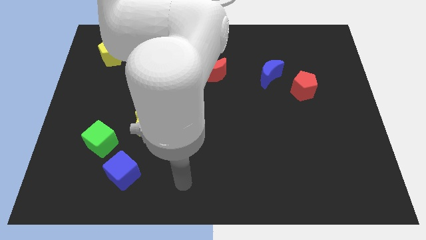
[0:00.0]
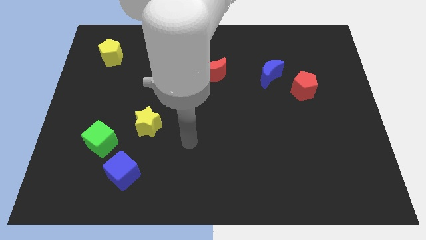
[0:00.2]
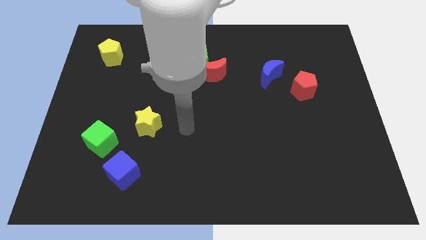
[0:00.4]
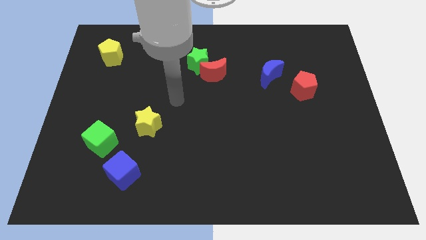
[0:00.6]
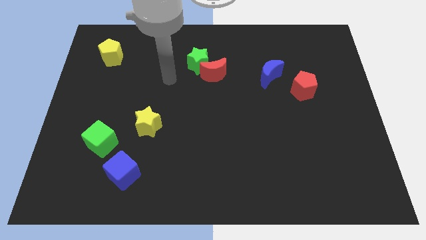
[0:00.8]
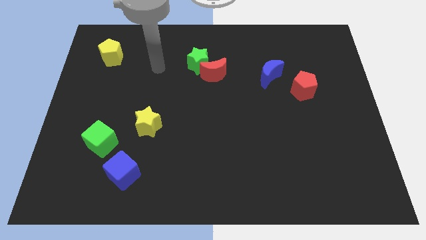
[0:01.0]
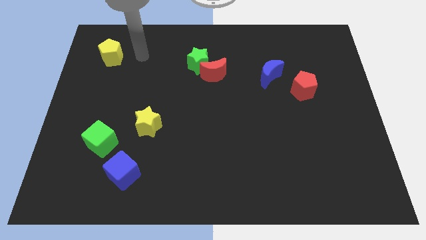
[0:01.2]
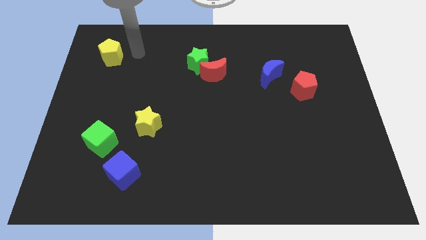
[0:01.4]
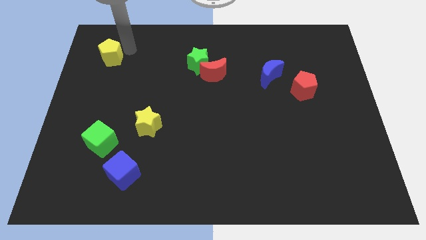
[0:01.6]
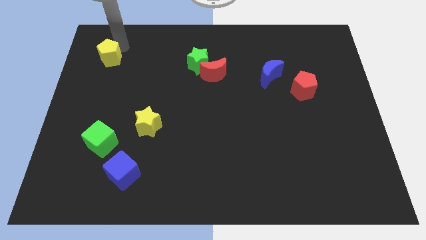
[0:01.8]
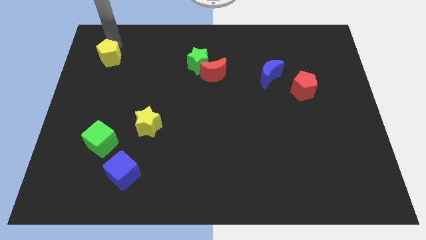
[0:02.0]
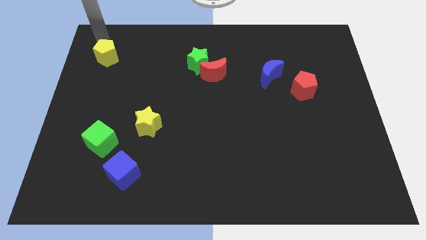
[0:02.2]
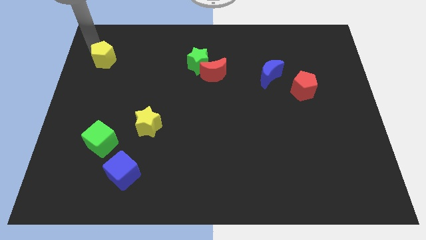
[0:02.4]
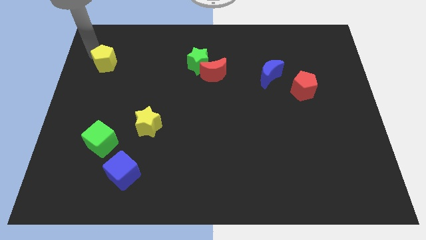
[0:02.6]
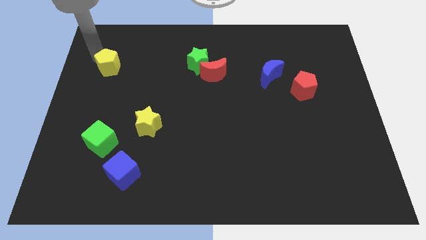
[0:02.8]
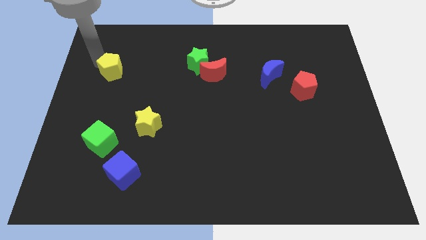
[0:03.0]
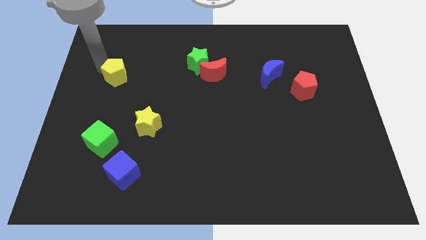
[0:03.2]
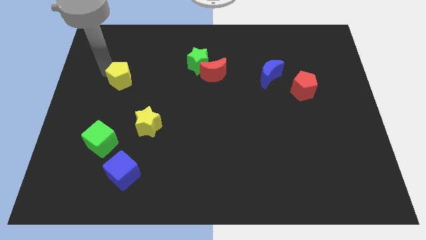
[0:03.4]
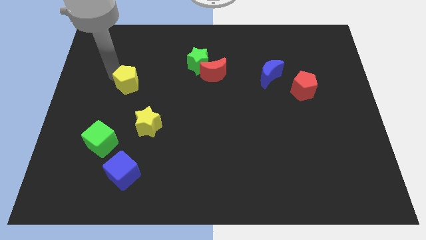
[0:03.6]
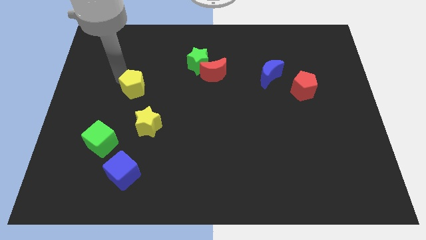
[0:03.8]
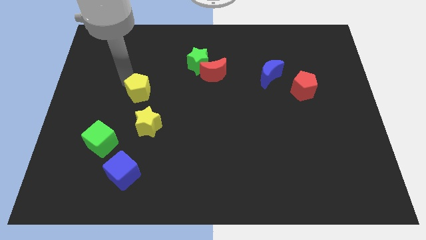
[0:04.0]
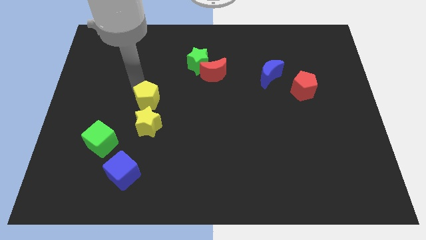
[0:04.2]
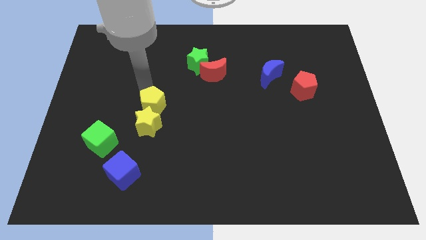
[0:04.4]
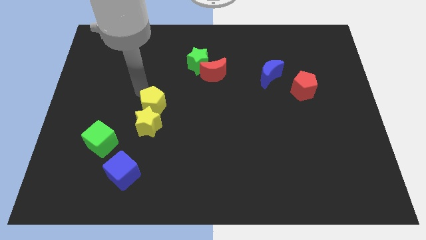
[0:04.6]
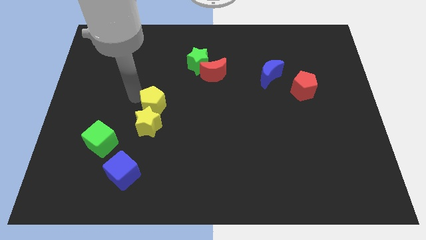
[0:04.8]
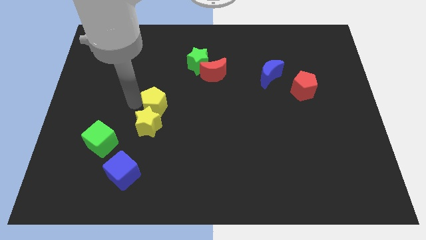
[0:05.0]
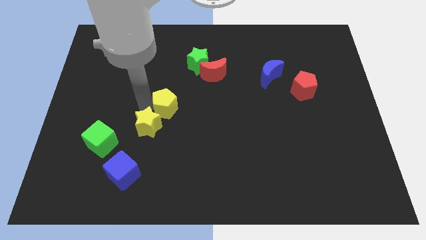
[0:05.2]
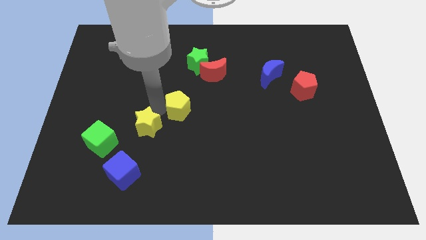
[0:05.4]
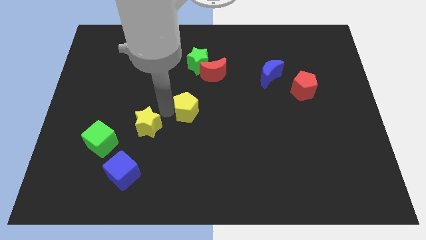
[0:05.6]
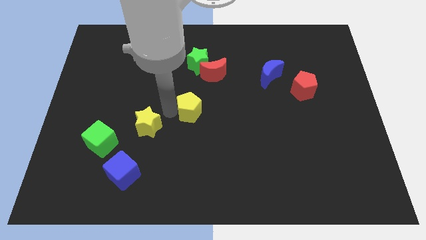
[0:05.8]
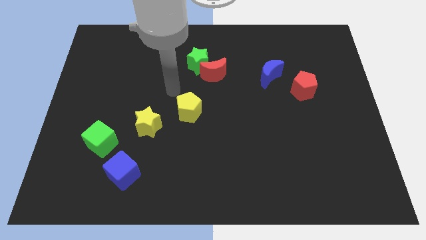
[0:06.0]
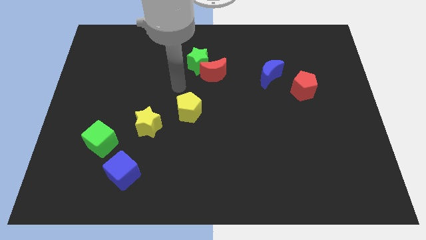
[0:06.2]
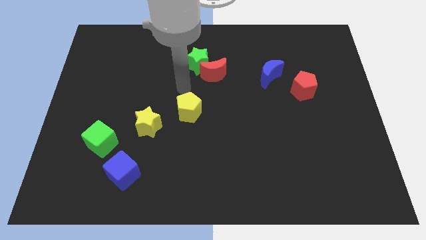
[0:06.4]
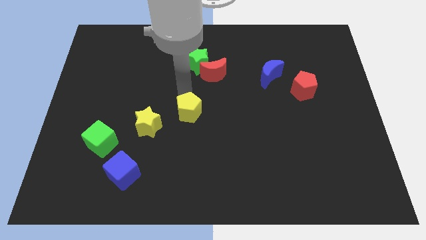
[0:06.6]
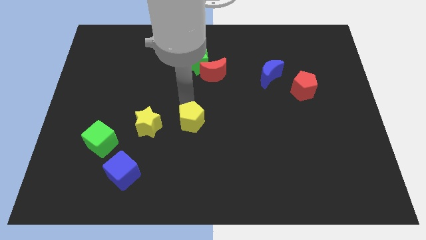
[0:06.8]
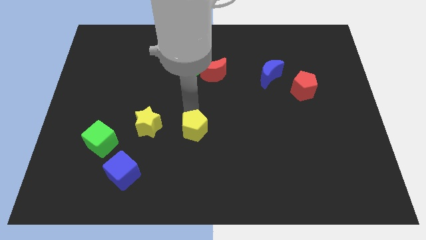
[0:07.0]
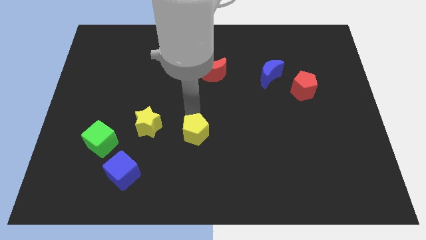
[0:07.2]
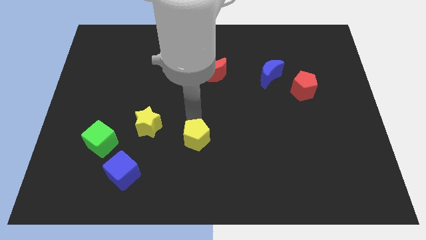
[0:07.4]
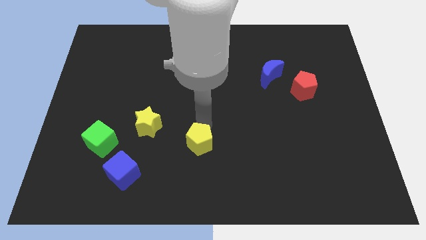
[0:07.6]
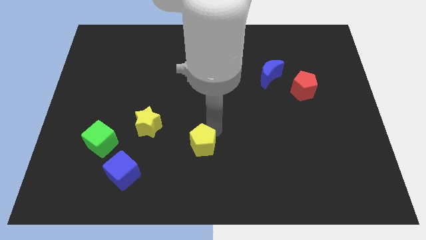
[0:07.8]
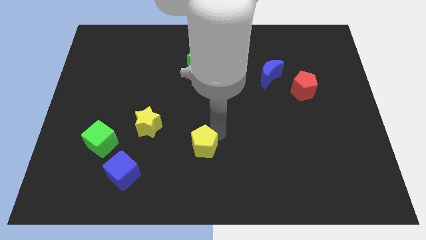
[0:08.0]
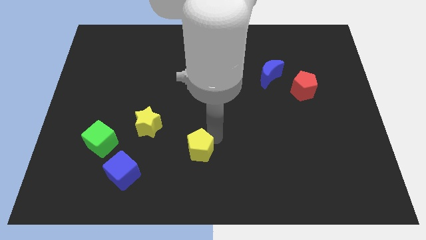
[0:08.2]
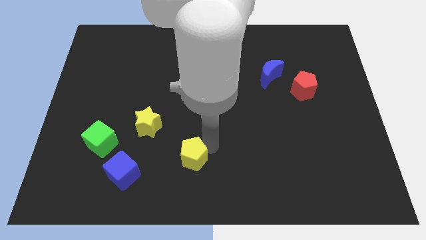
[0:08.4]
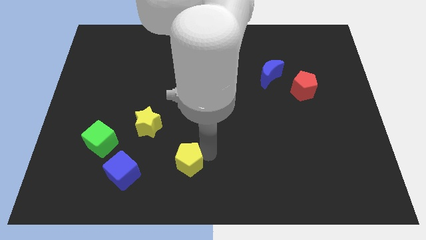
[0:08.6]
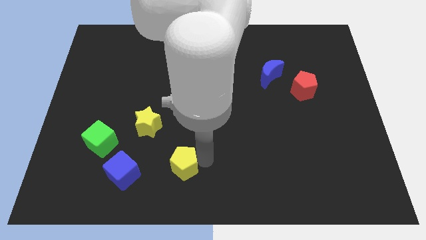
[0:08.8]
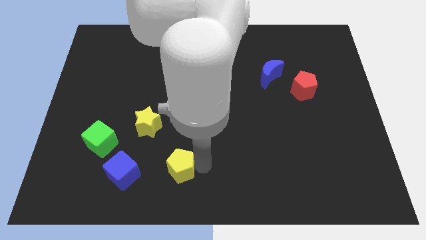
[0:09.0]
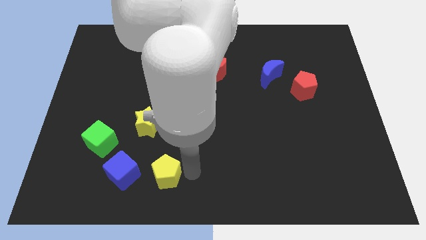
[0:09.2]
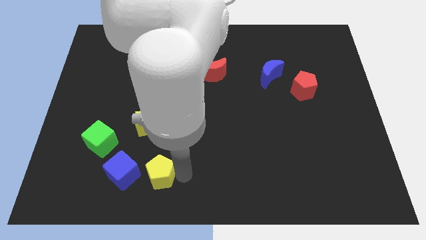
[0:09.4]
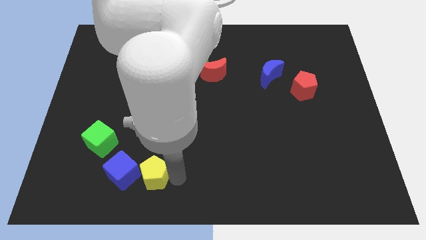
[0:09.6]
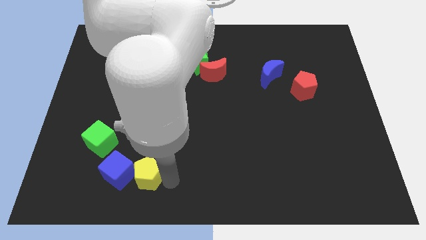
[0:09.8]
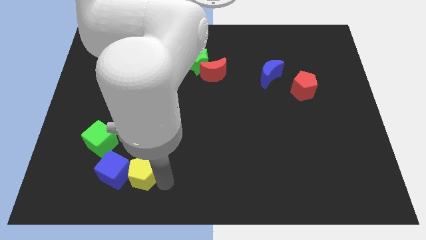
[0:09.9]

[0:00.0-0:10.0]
put the yellow pentagon to the blue cube

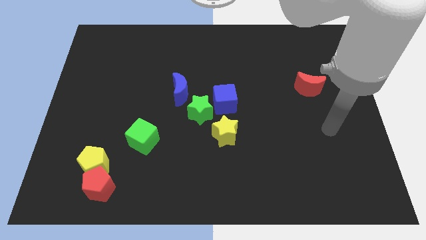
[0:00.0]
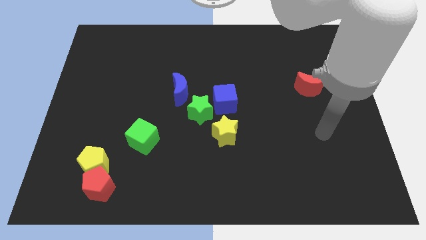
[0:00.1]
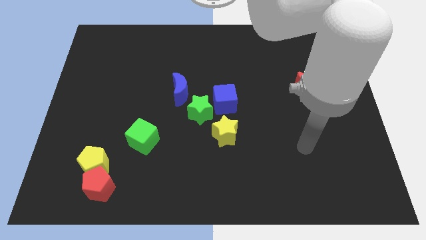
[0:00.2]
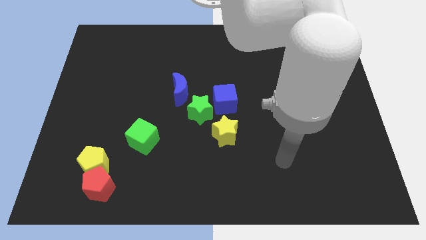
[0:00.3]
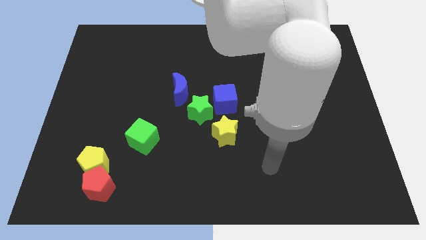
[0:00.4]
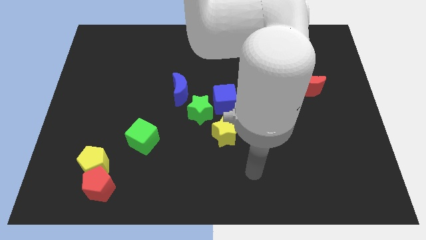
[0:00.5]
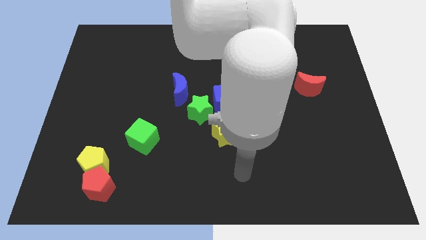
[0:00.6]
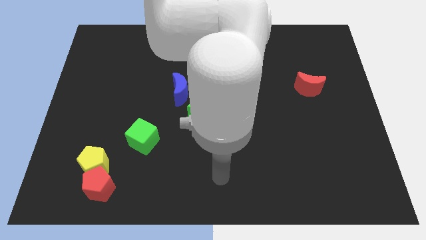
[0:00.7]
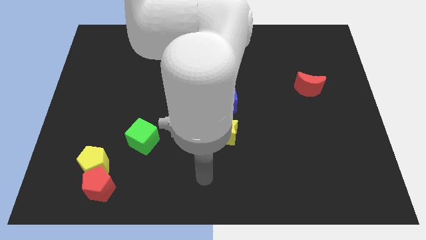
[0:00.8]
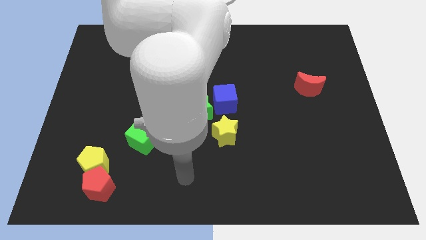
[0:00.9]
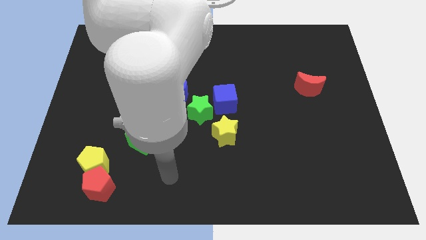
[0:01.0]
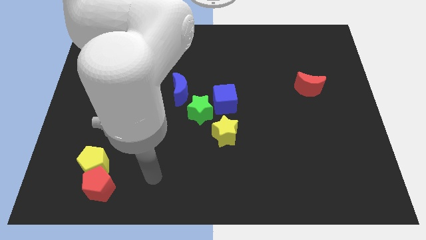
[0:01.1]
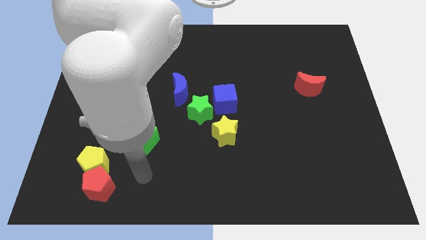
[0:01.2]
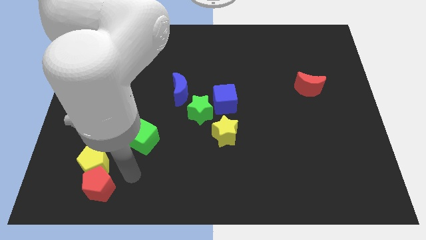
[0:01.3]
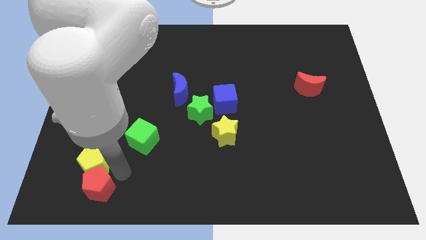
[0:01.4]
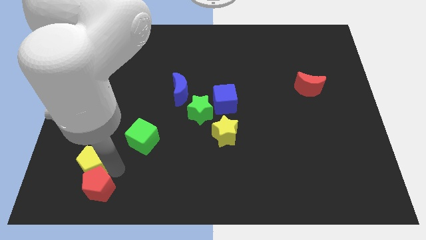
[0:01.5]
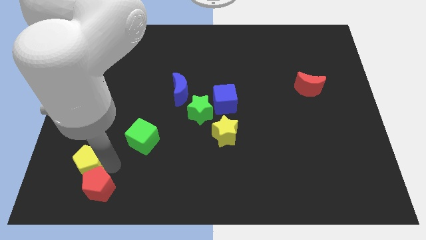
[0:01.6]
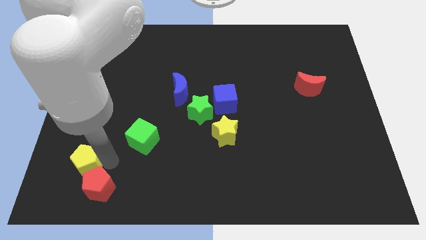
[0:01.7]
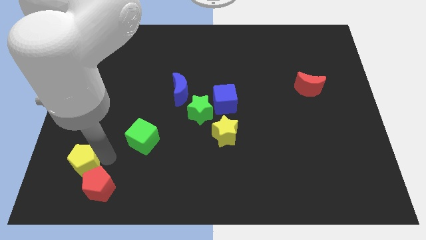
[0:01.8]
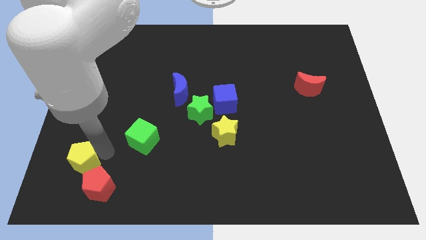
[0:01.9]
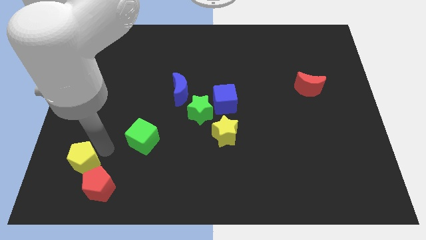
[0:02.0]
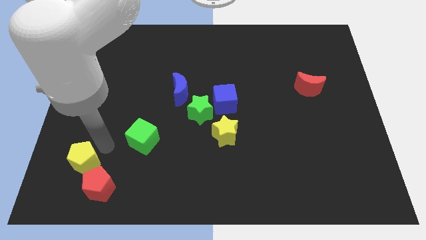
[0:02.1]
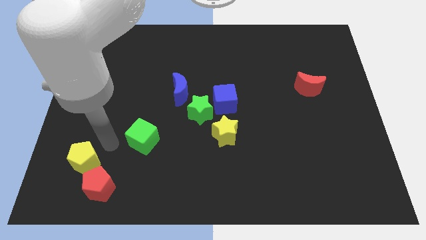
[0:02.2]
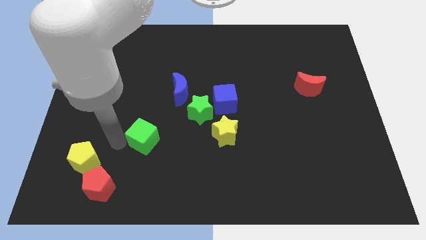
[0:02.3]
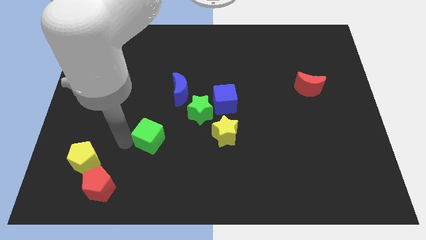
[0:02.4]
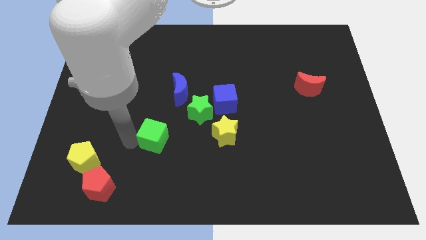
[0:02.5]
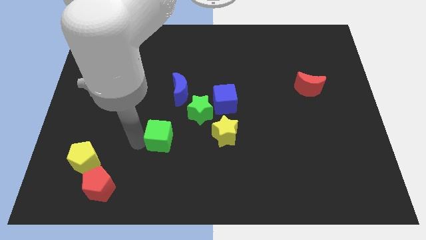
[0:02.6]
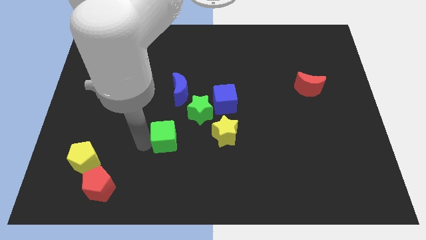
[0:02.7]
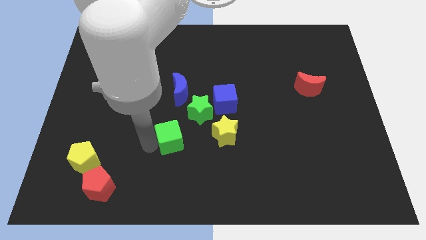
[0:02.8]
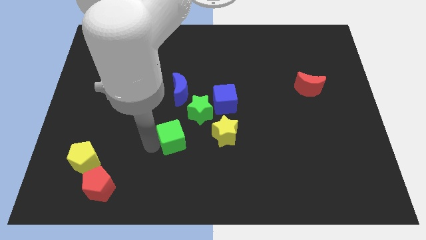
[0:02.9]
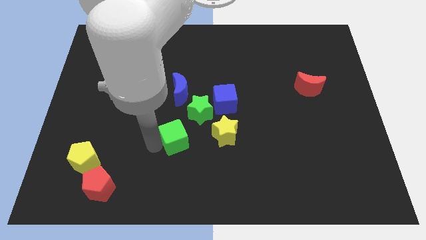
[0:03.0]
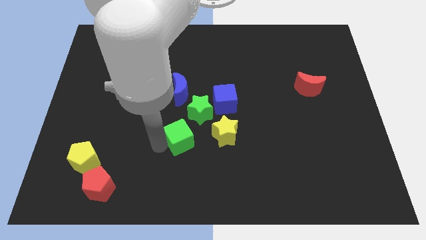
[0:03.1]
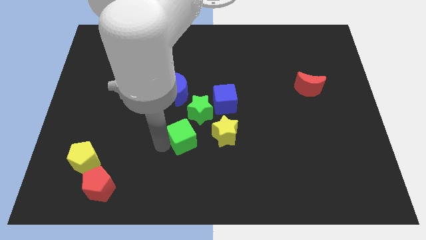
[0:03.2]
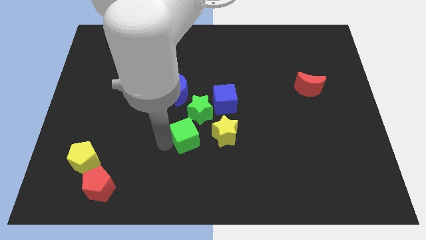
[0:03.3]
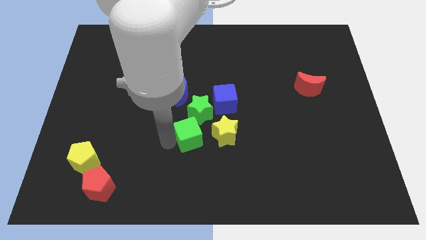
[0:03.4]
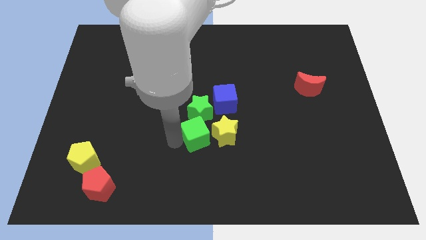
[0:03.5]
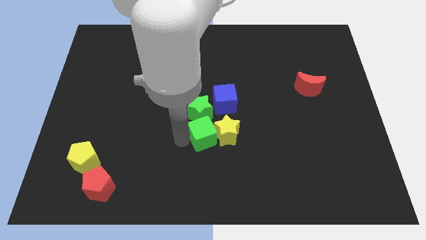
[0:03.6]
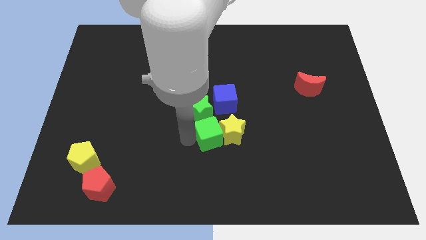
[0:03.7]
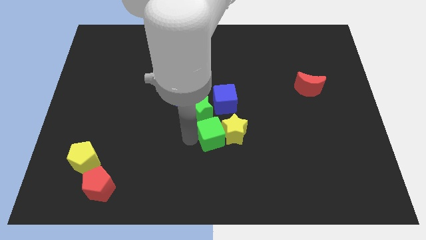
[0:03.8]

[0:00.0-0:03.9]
slide the green cube close to the yellow star
